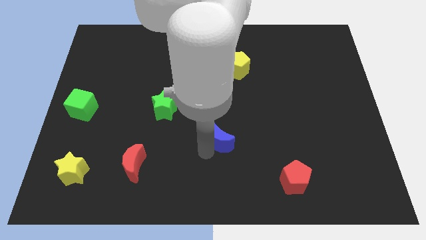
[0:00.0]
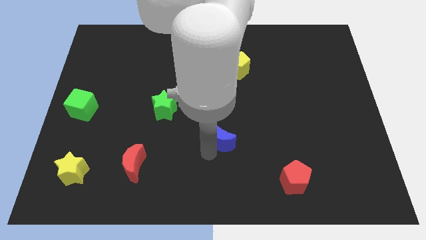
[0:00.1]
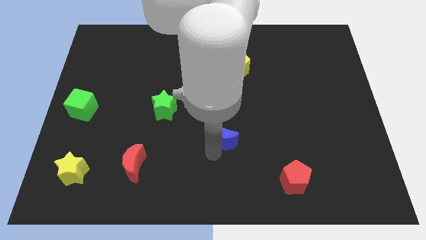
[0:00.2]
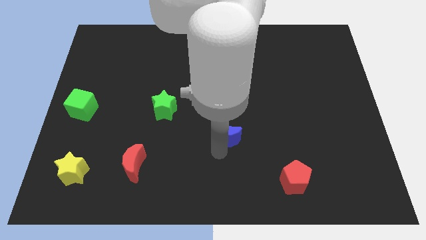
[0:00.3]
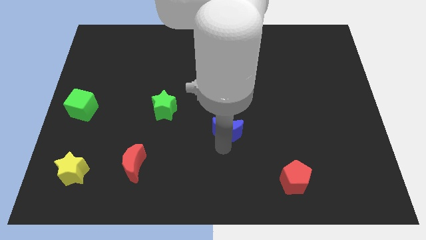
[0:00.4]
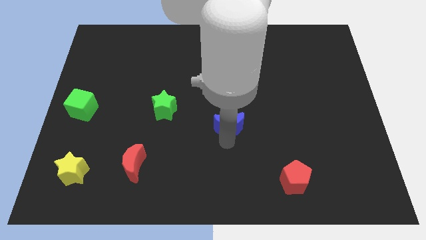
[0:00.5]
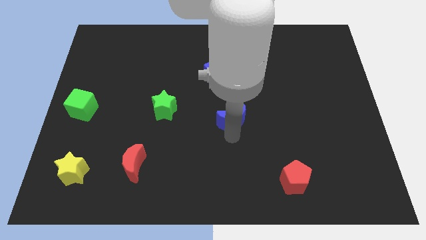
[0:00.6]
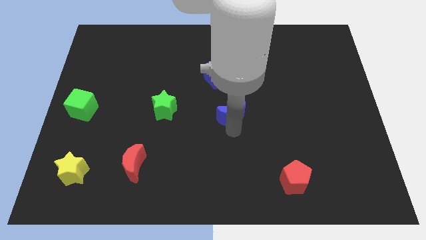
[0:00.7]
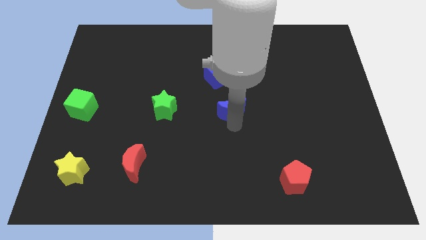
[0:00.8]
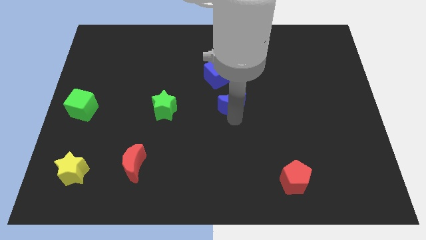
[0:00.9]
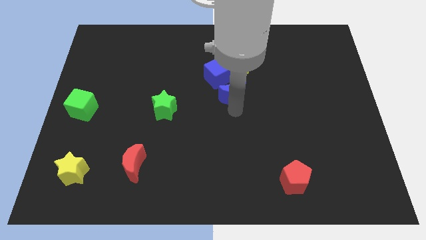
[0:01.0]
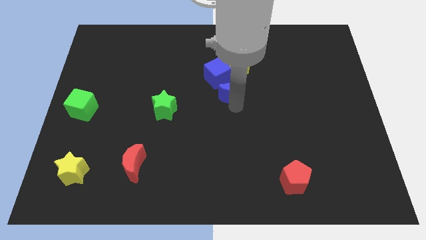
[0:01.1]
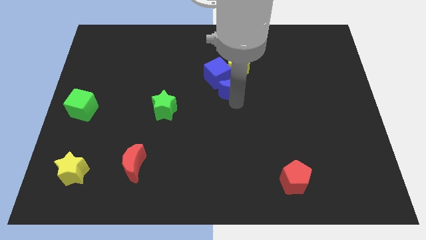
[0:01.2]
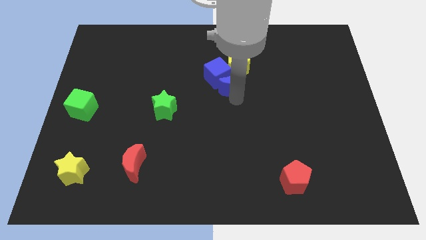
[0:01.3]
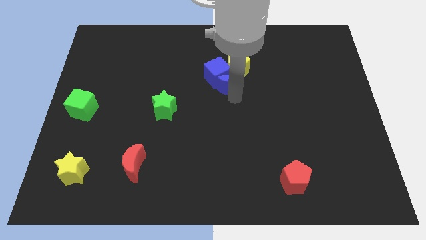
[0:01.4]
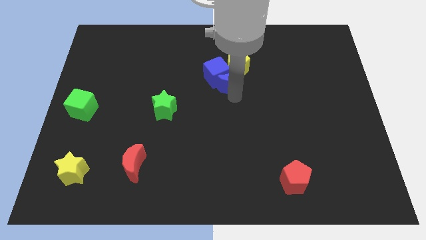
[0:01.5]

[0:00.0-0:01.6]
move the blue crescent into the bottom of the blue cube

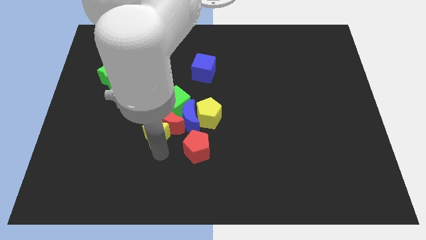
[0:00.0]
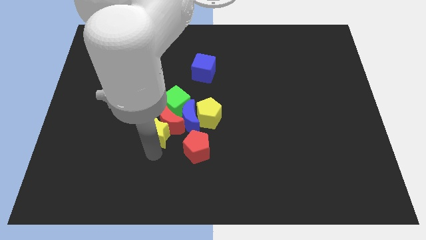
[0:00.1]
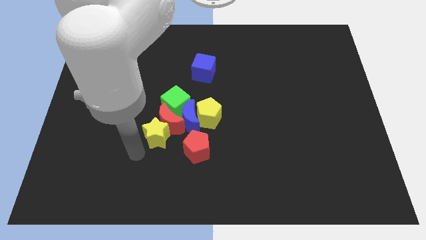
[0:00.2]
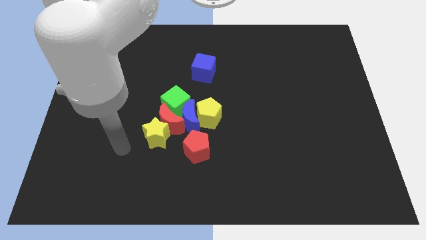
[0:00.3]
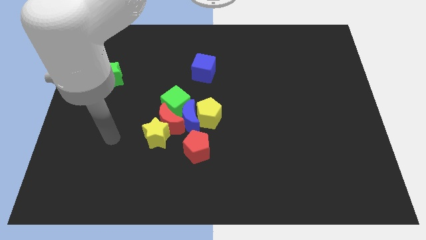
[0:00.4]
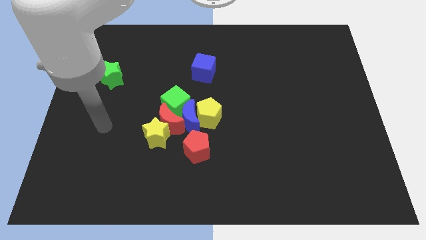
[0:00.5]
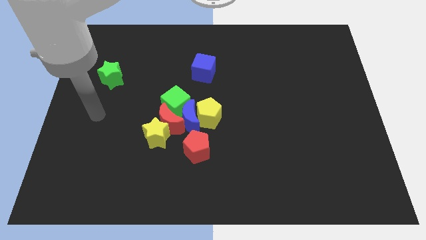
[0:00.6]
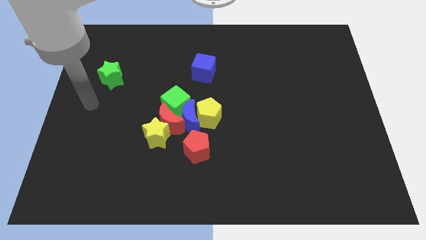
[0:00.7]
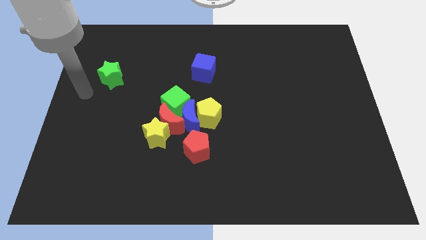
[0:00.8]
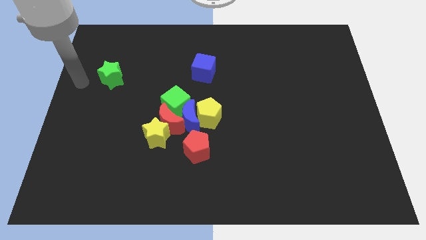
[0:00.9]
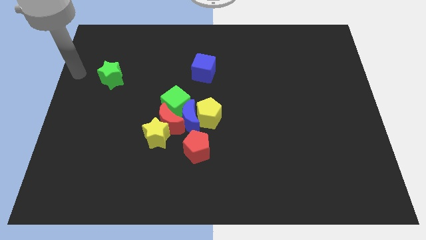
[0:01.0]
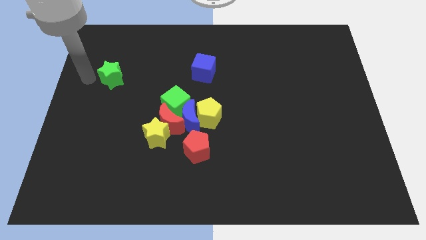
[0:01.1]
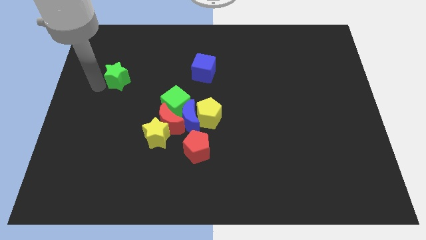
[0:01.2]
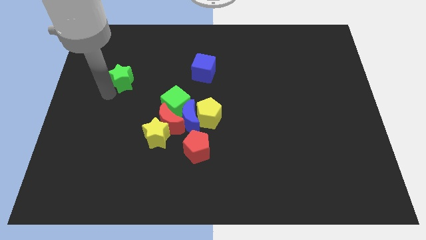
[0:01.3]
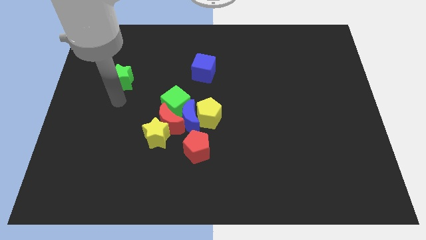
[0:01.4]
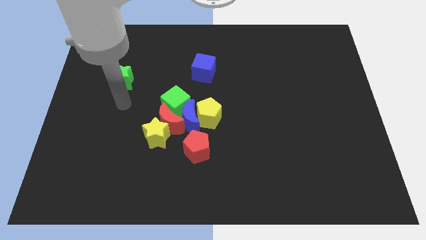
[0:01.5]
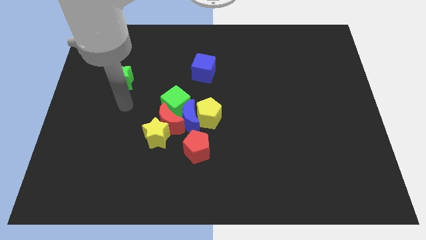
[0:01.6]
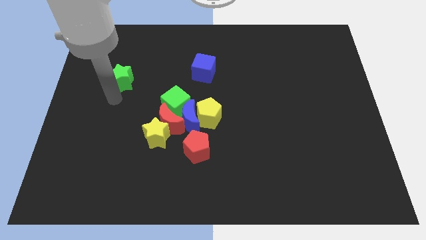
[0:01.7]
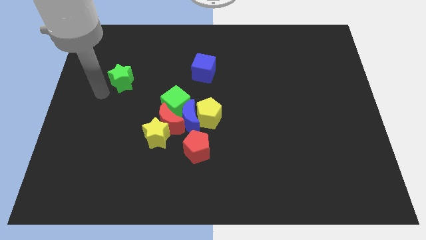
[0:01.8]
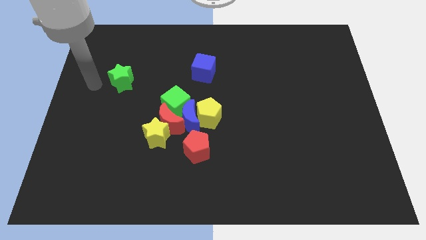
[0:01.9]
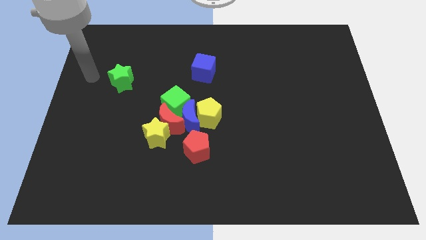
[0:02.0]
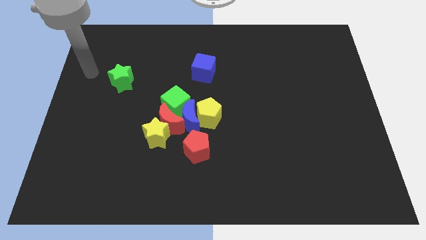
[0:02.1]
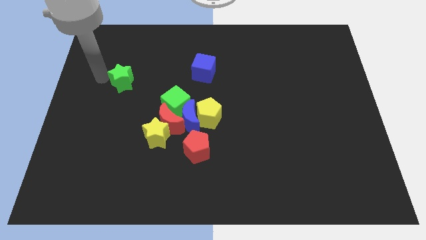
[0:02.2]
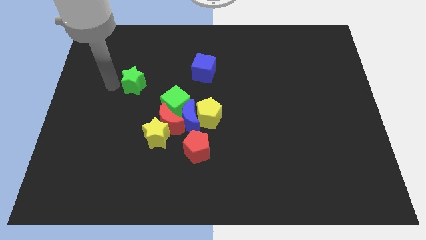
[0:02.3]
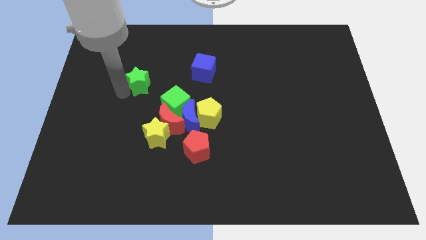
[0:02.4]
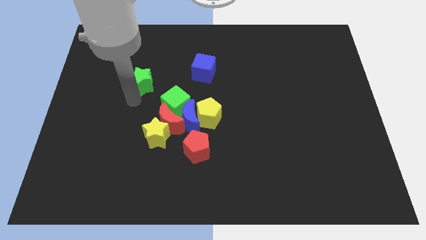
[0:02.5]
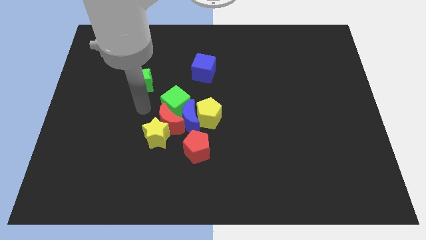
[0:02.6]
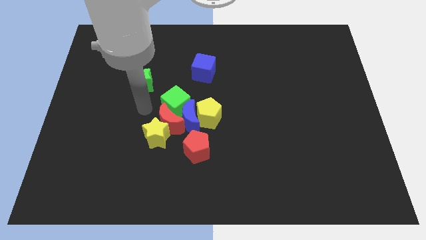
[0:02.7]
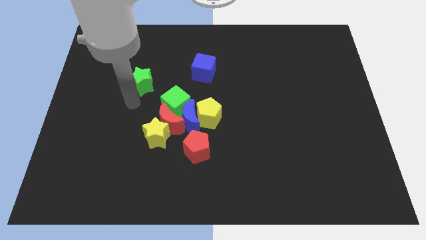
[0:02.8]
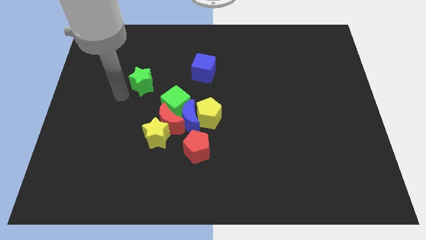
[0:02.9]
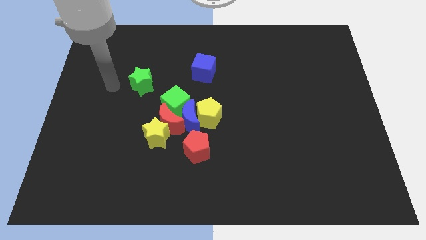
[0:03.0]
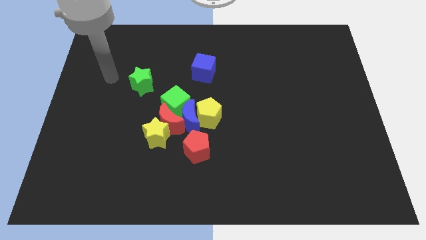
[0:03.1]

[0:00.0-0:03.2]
place the green star diagonal to the green cube

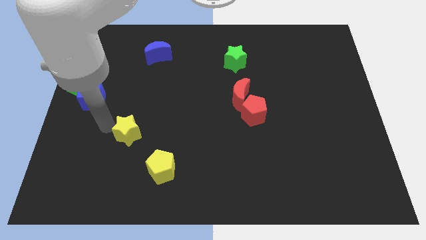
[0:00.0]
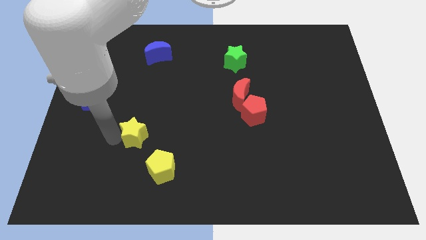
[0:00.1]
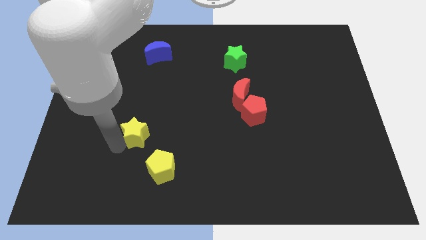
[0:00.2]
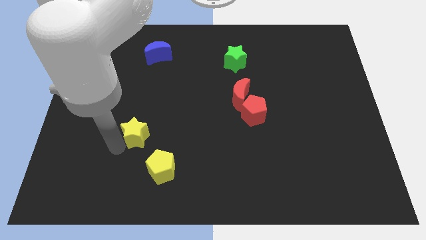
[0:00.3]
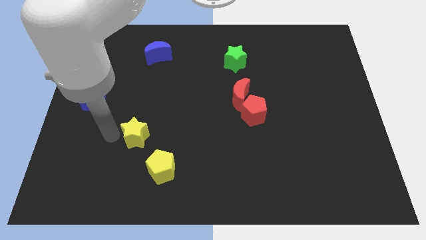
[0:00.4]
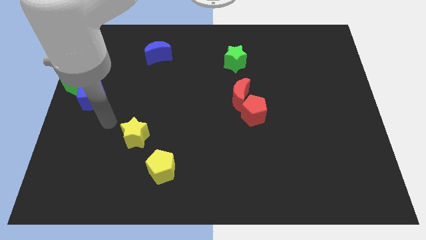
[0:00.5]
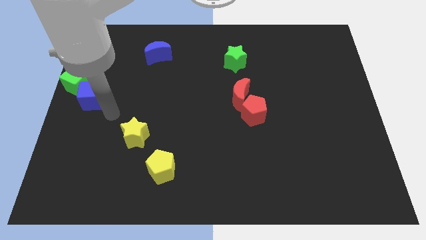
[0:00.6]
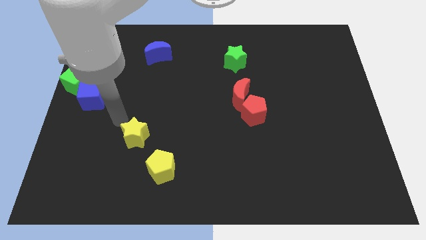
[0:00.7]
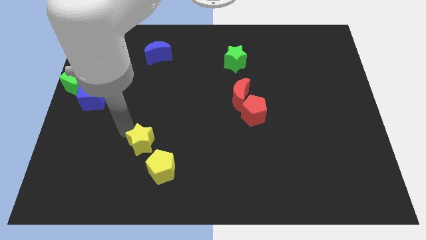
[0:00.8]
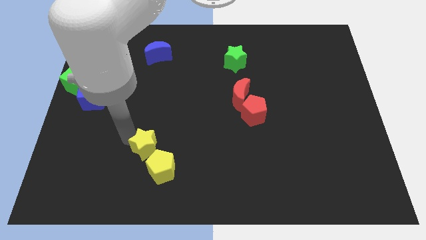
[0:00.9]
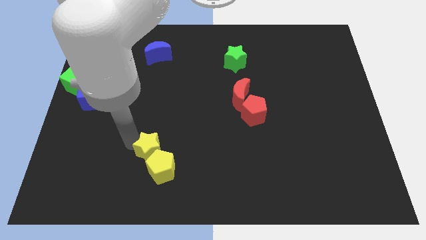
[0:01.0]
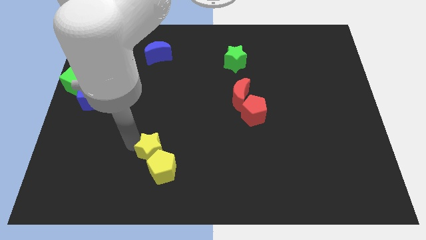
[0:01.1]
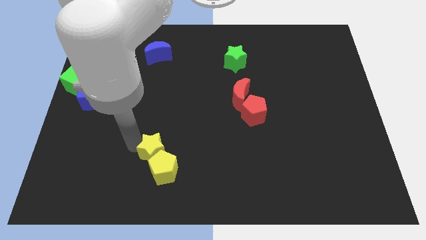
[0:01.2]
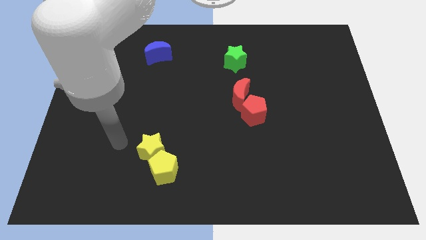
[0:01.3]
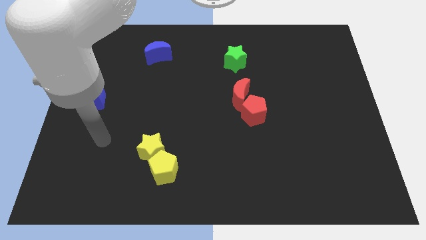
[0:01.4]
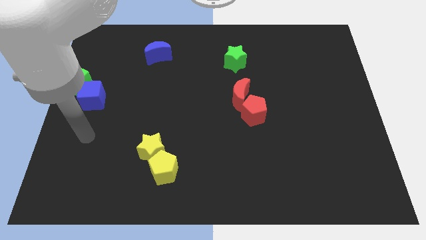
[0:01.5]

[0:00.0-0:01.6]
push the yellow star towards the yellow pentagon

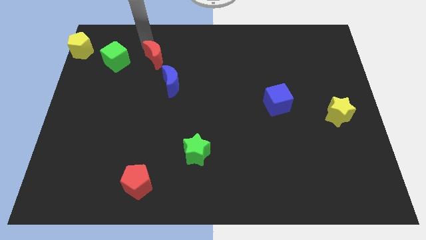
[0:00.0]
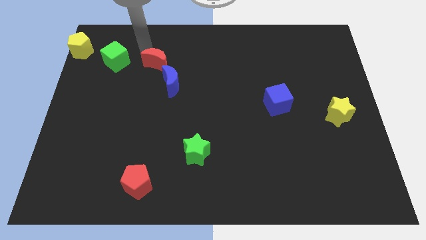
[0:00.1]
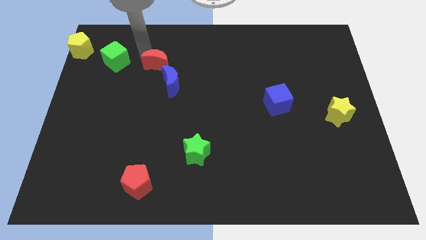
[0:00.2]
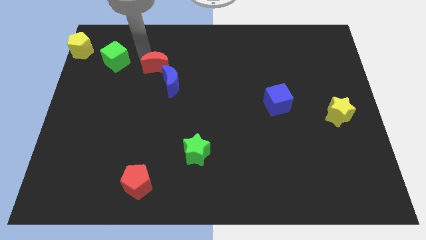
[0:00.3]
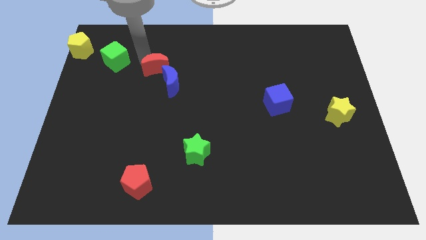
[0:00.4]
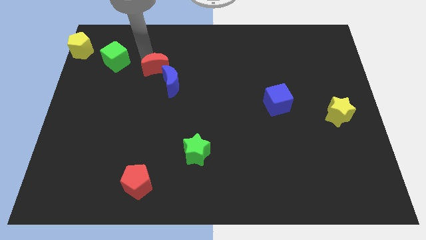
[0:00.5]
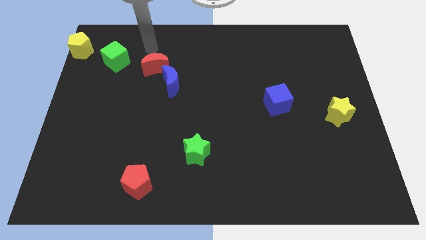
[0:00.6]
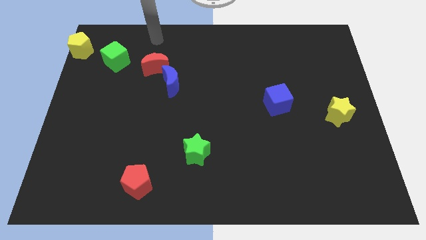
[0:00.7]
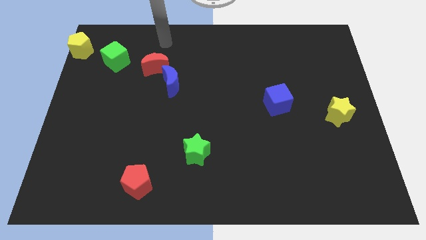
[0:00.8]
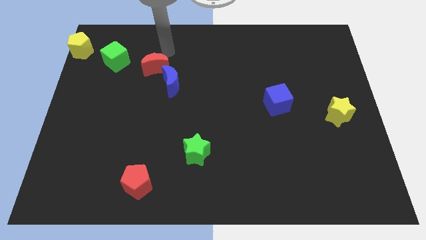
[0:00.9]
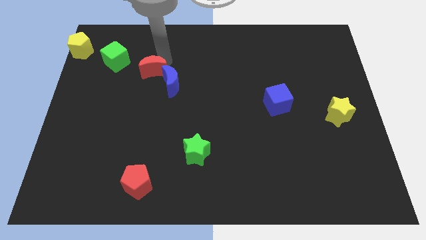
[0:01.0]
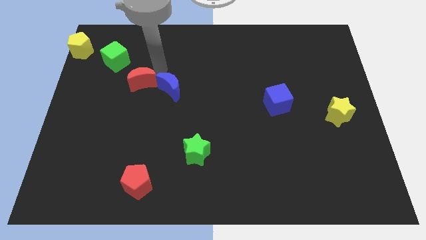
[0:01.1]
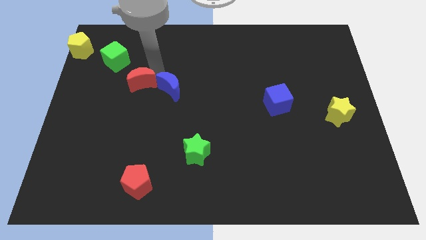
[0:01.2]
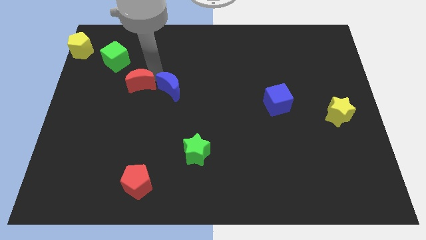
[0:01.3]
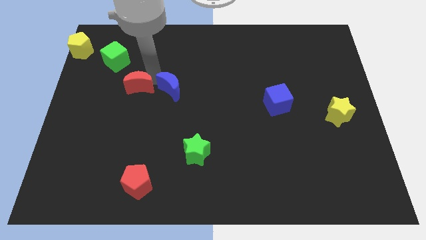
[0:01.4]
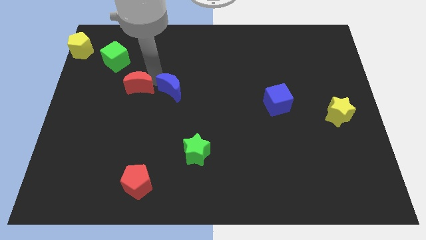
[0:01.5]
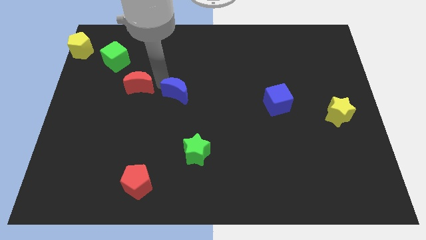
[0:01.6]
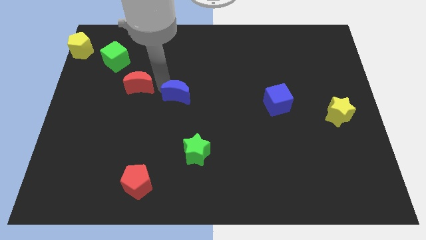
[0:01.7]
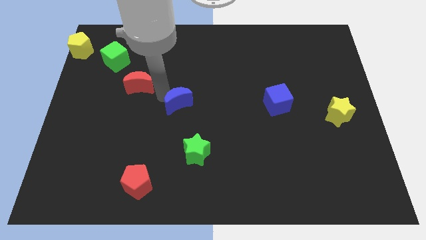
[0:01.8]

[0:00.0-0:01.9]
move the red crescent parallel to the blue crescent

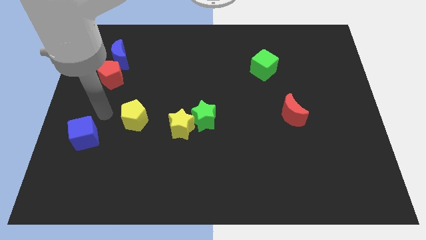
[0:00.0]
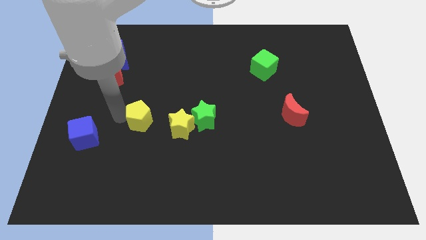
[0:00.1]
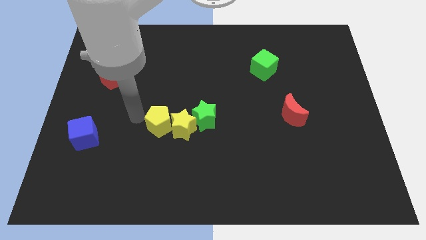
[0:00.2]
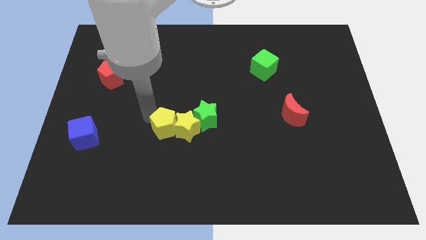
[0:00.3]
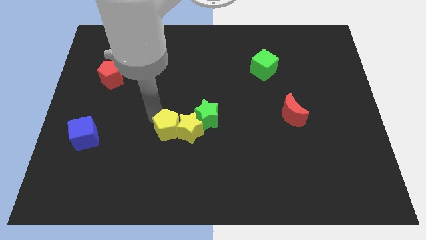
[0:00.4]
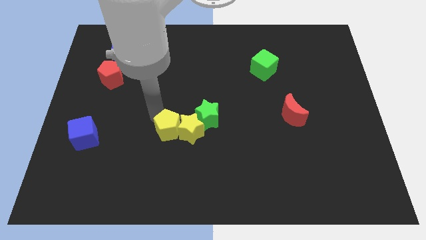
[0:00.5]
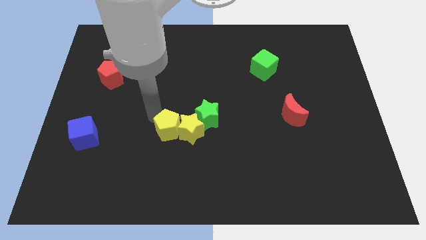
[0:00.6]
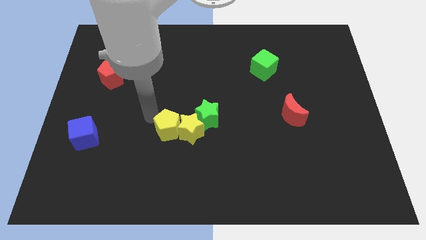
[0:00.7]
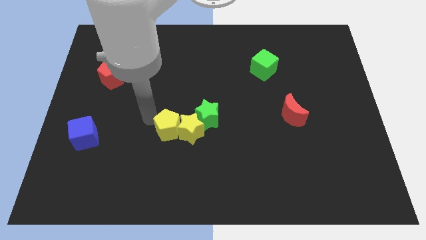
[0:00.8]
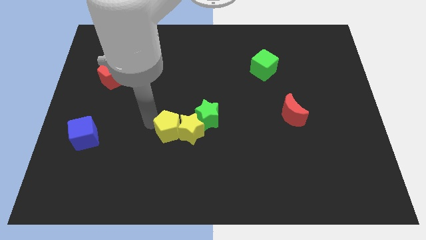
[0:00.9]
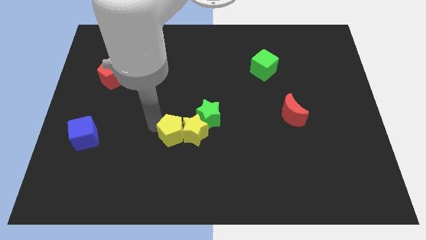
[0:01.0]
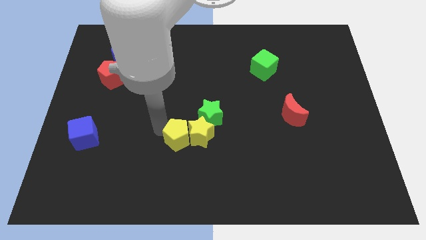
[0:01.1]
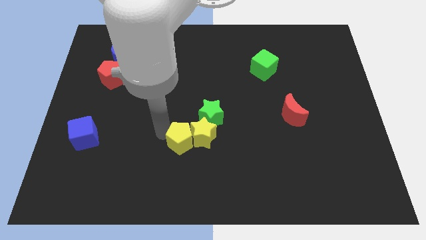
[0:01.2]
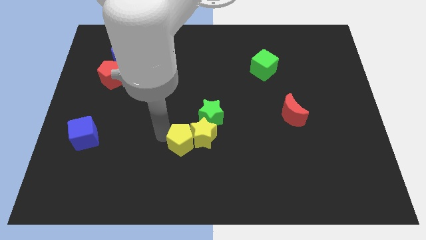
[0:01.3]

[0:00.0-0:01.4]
push the yellow pentagon into the yellow star
